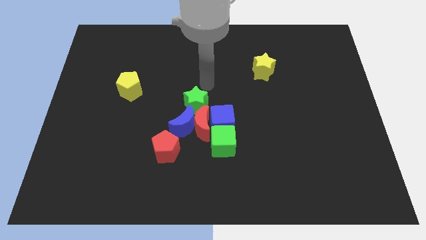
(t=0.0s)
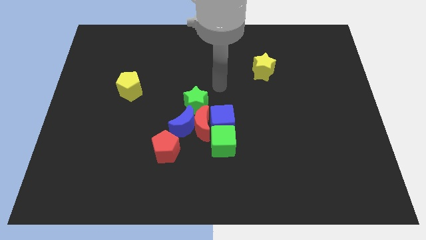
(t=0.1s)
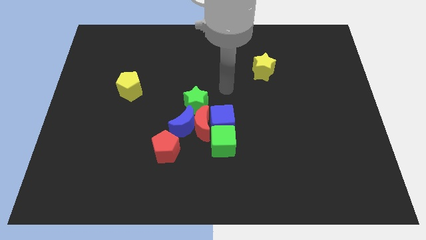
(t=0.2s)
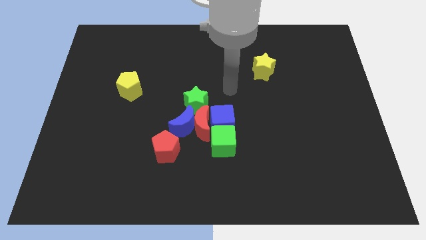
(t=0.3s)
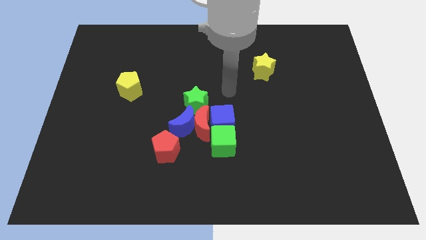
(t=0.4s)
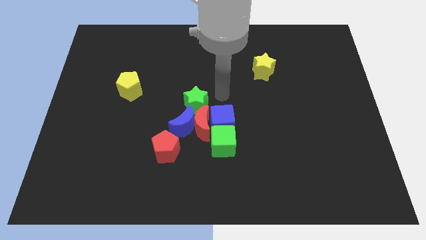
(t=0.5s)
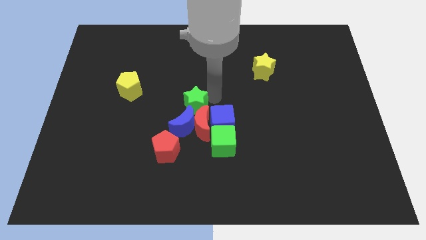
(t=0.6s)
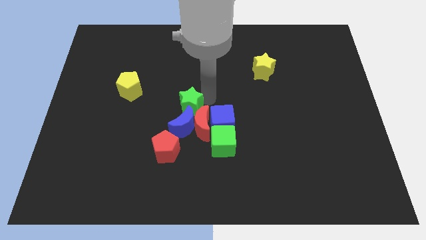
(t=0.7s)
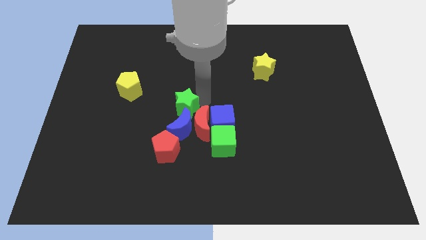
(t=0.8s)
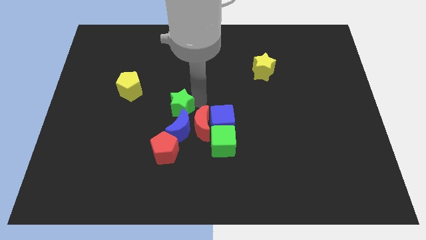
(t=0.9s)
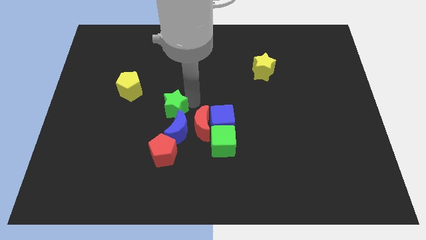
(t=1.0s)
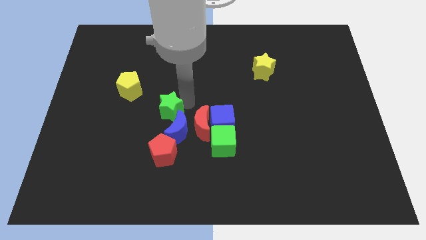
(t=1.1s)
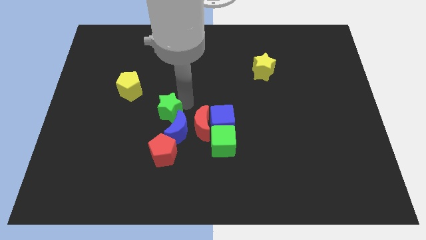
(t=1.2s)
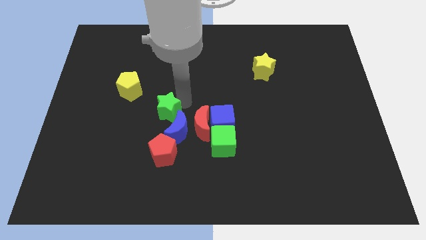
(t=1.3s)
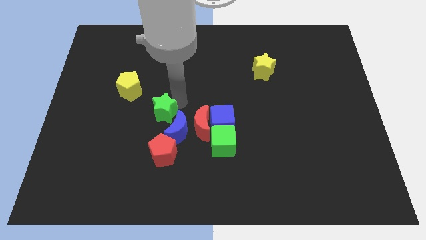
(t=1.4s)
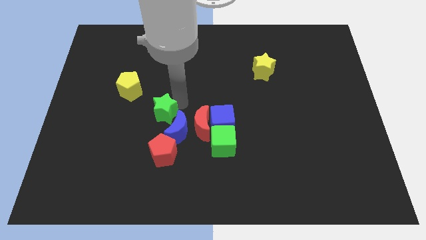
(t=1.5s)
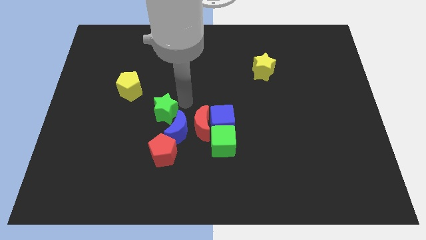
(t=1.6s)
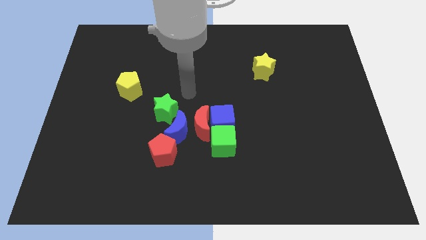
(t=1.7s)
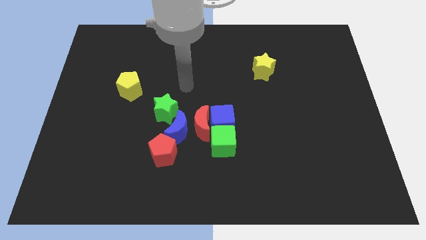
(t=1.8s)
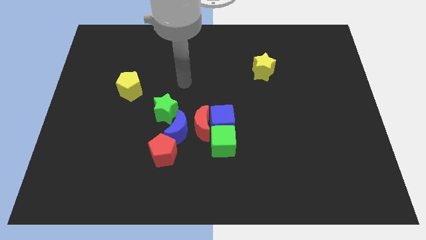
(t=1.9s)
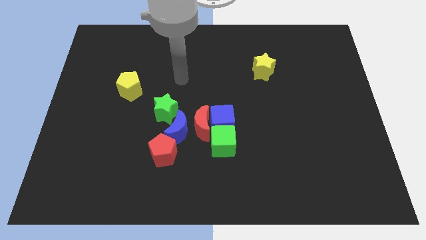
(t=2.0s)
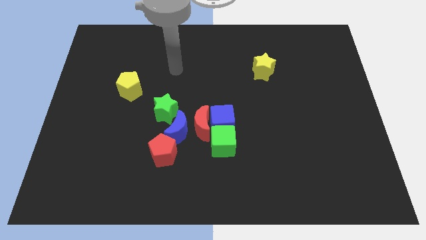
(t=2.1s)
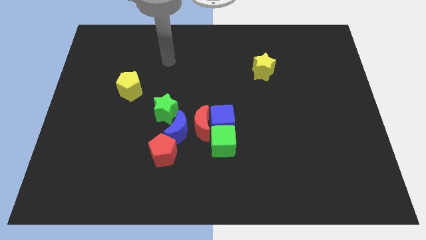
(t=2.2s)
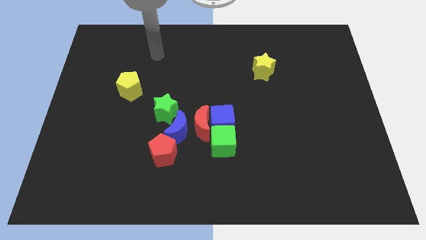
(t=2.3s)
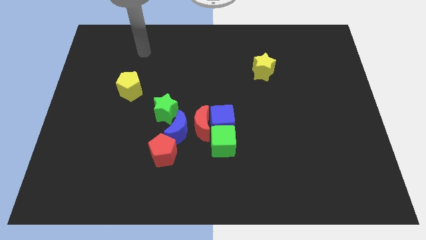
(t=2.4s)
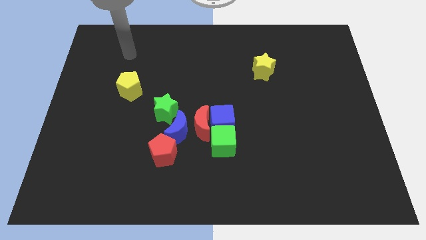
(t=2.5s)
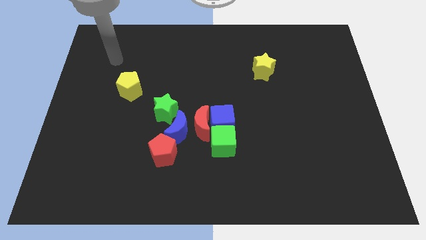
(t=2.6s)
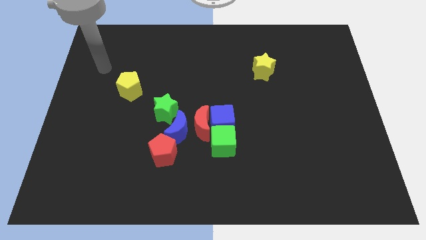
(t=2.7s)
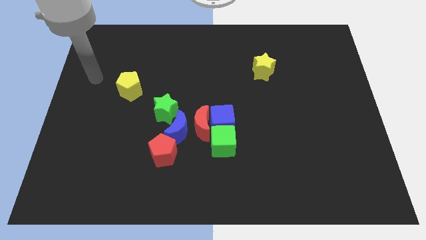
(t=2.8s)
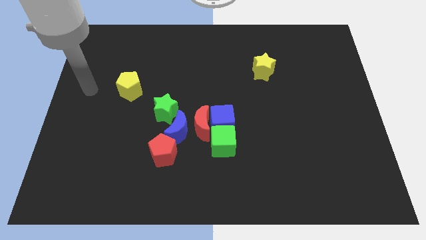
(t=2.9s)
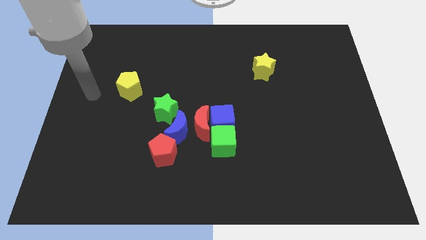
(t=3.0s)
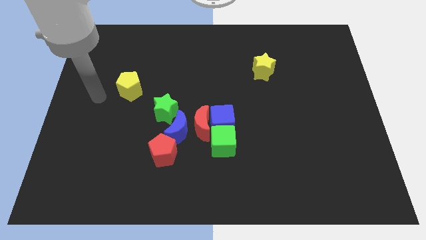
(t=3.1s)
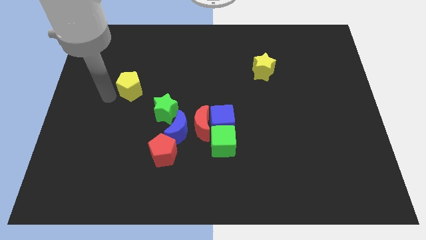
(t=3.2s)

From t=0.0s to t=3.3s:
slide the green star to the top left side of the blue moon

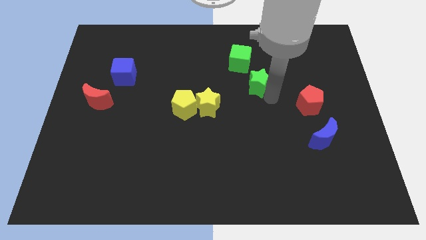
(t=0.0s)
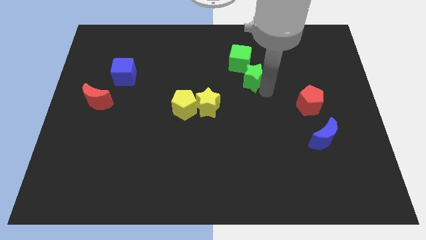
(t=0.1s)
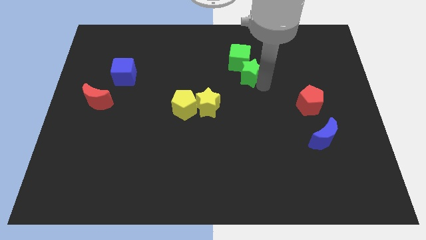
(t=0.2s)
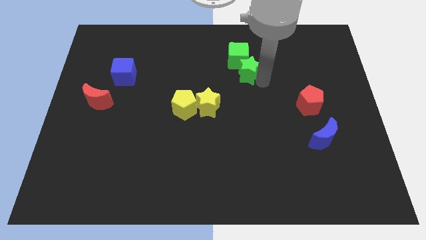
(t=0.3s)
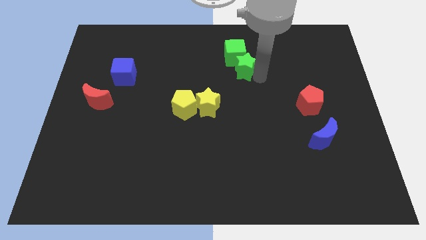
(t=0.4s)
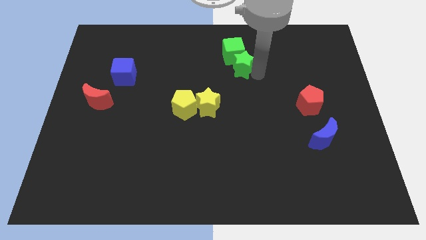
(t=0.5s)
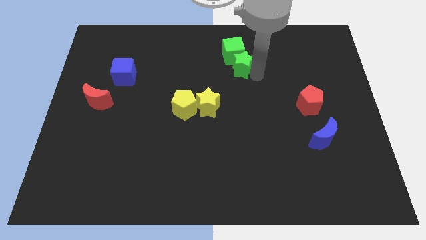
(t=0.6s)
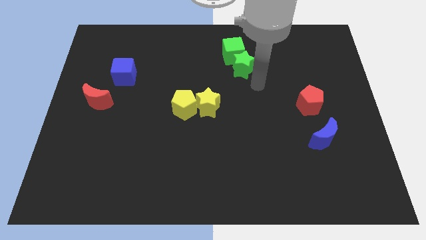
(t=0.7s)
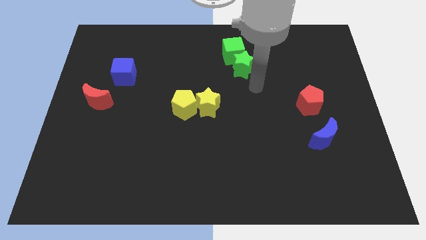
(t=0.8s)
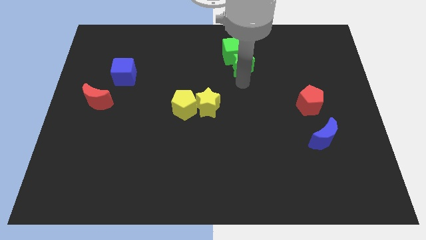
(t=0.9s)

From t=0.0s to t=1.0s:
push the green star into the green cube

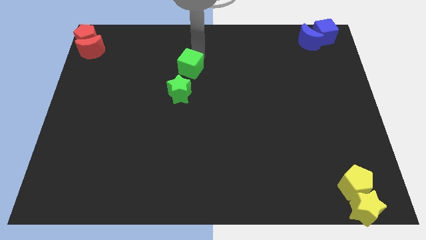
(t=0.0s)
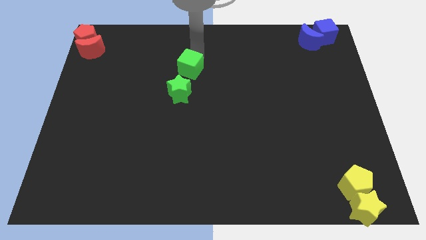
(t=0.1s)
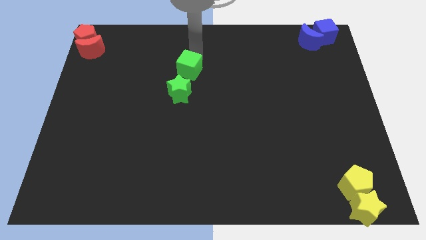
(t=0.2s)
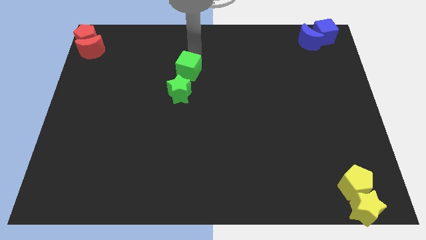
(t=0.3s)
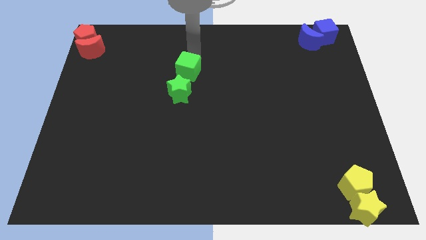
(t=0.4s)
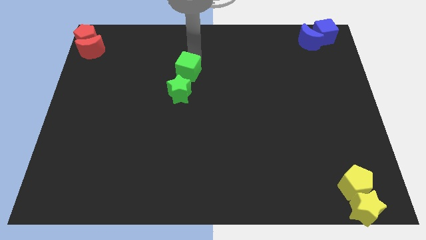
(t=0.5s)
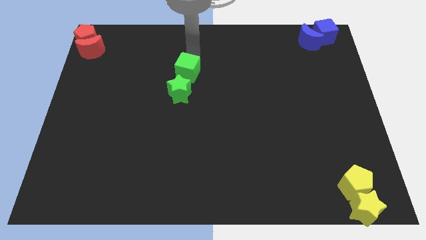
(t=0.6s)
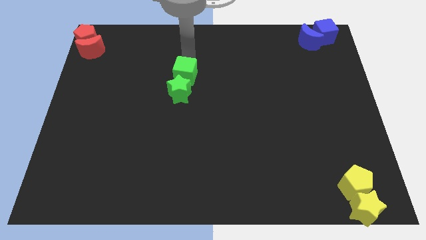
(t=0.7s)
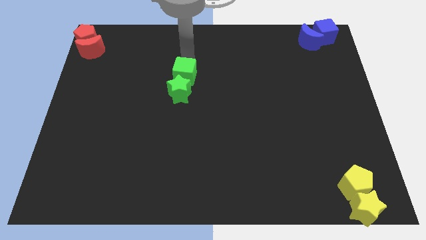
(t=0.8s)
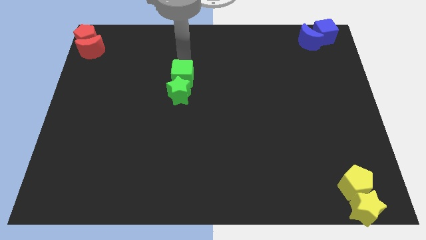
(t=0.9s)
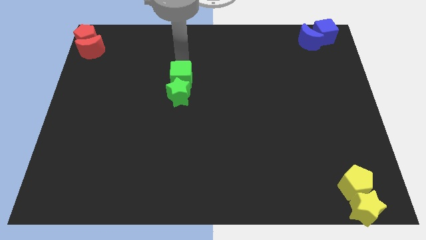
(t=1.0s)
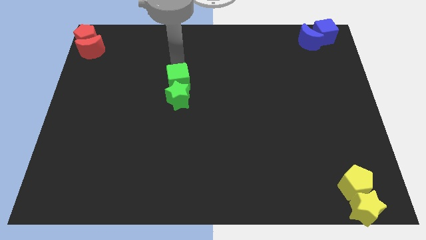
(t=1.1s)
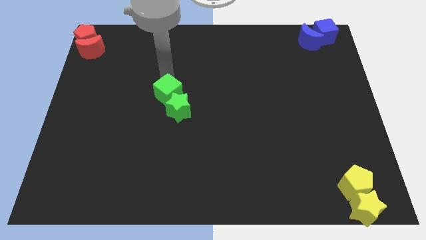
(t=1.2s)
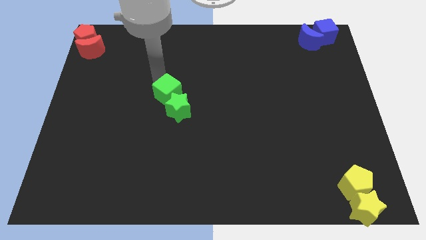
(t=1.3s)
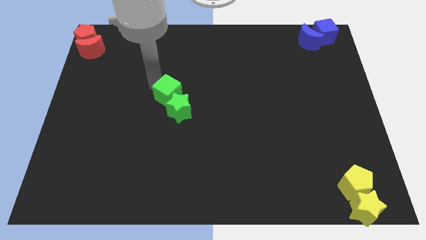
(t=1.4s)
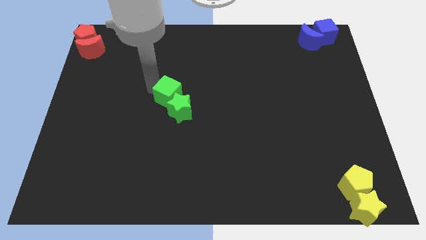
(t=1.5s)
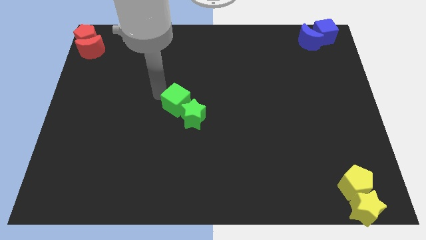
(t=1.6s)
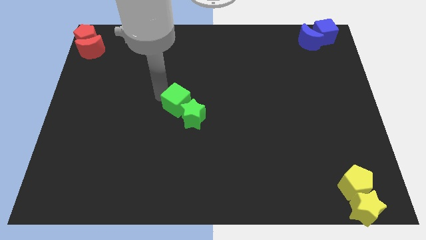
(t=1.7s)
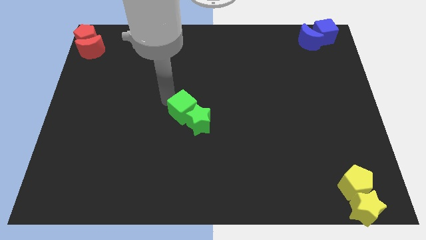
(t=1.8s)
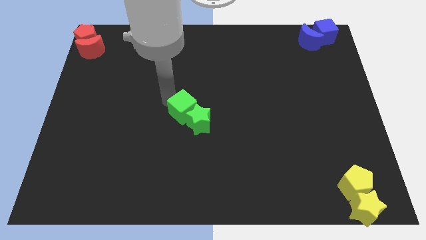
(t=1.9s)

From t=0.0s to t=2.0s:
push the green cube into the green star

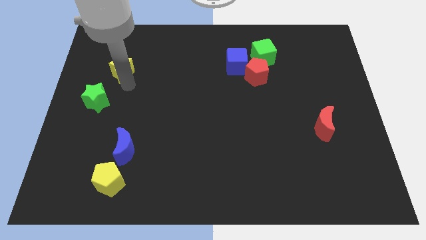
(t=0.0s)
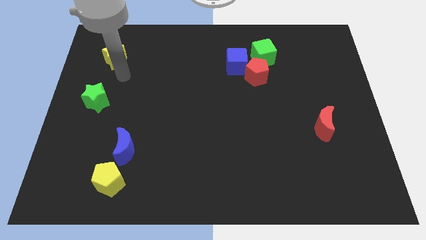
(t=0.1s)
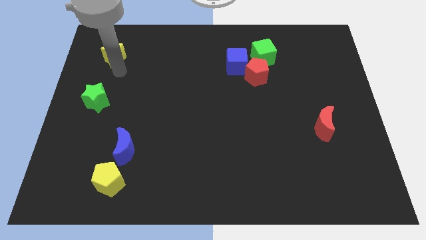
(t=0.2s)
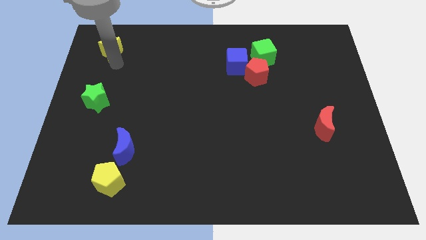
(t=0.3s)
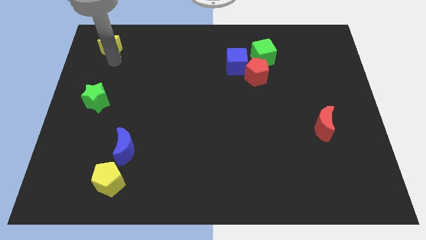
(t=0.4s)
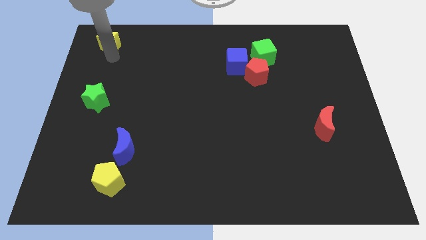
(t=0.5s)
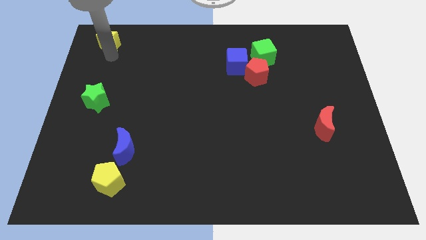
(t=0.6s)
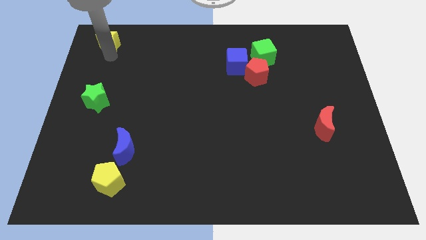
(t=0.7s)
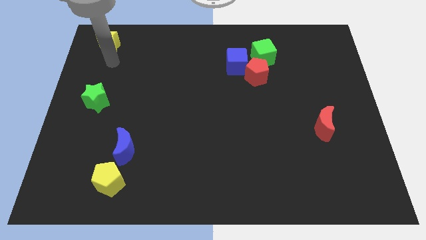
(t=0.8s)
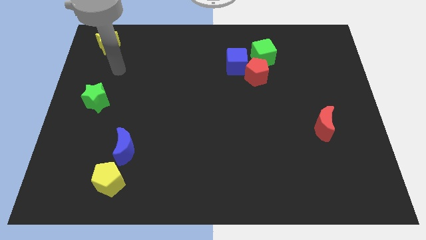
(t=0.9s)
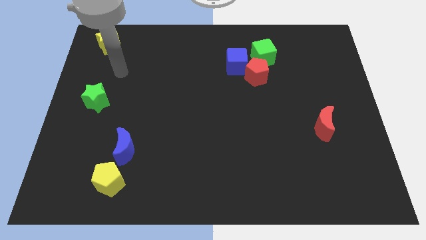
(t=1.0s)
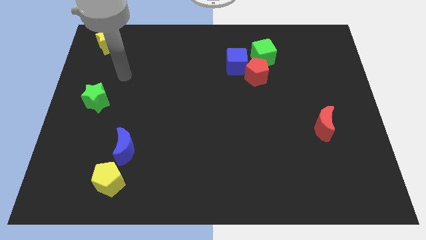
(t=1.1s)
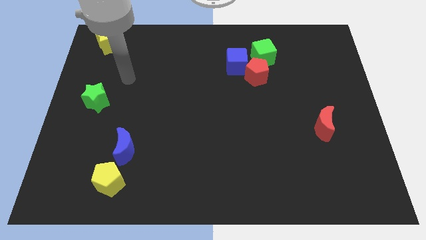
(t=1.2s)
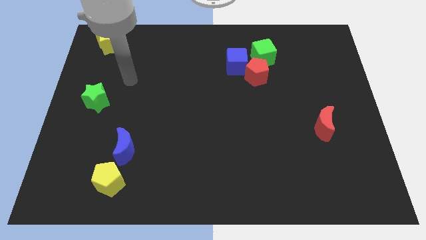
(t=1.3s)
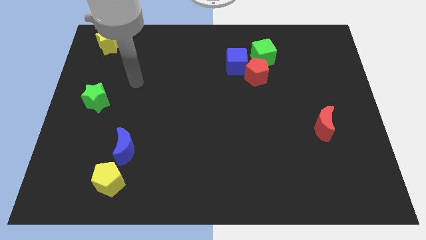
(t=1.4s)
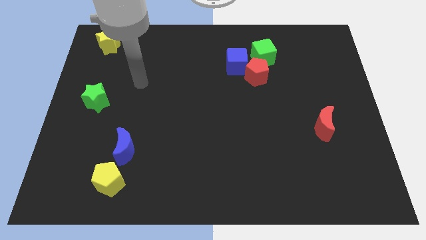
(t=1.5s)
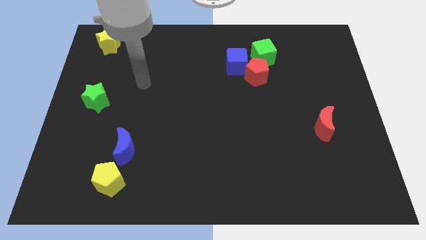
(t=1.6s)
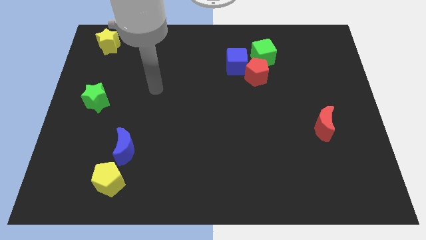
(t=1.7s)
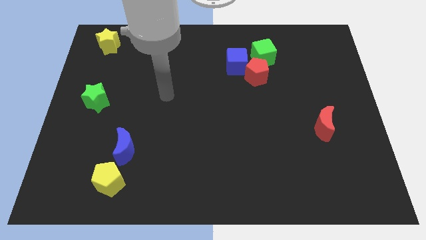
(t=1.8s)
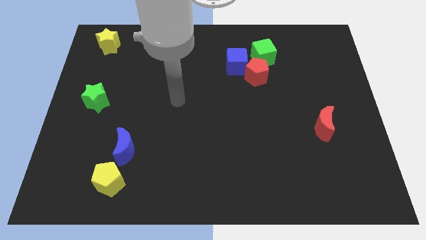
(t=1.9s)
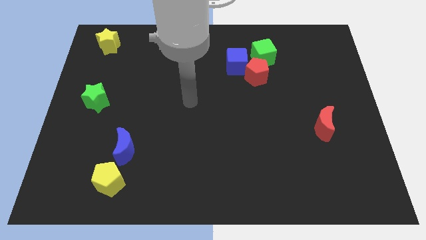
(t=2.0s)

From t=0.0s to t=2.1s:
move the yellow star to the top left side

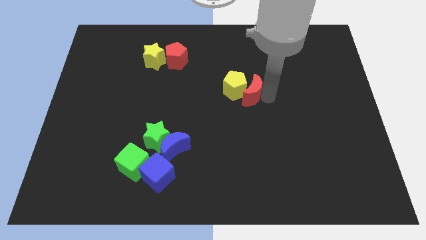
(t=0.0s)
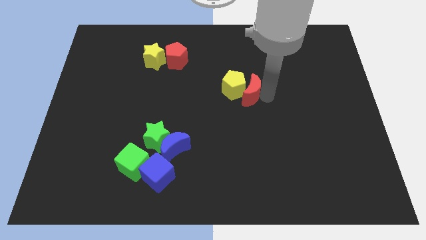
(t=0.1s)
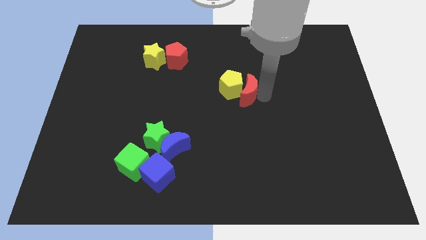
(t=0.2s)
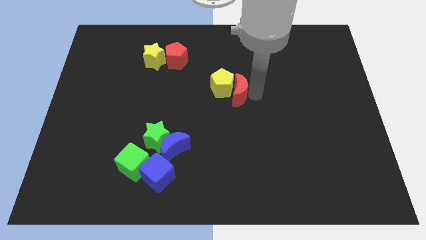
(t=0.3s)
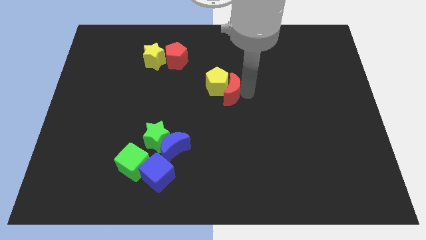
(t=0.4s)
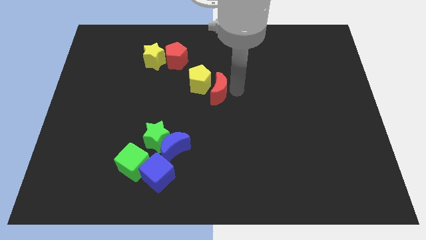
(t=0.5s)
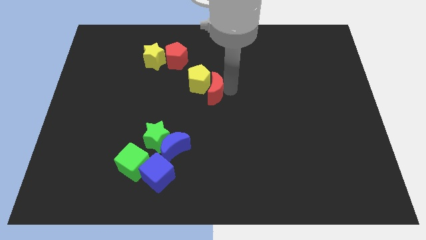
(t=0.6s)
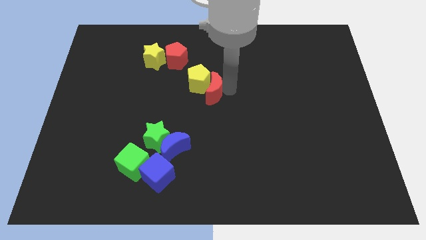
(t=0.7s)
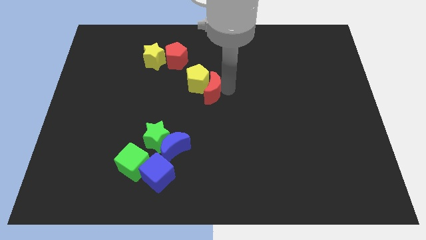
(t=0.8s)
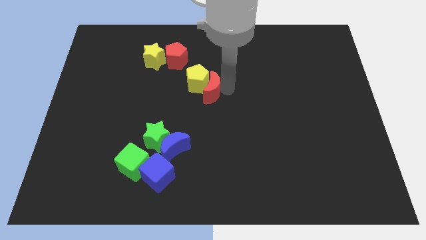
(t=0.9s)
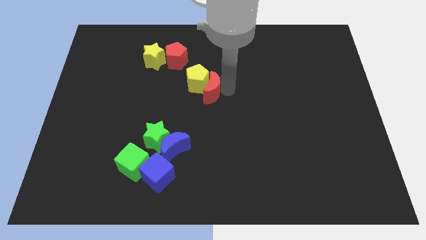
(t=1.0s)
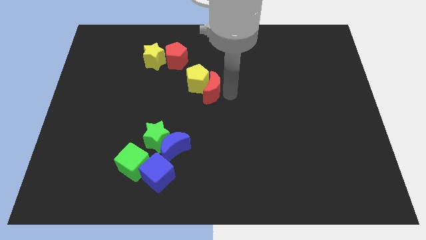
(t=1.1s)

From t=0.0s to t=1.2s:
push the red crescent and yellow pentagon slightly to the left
